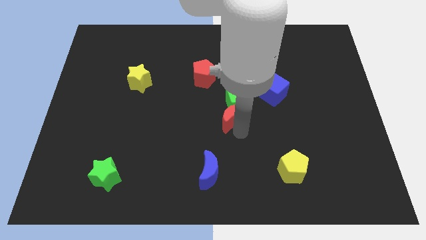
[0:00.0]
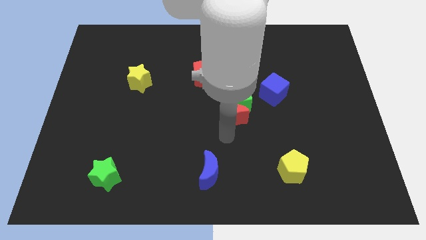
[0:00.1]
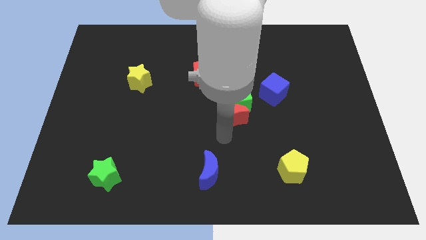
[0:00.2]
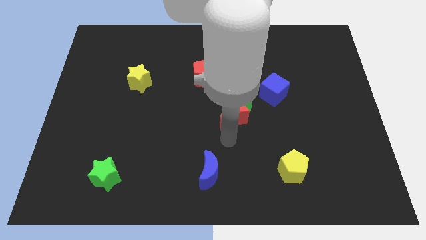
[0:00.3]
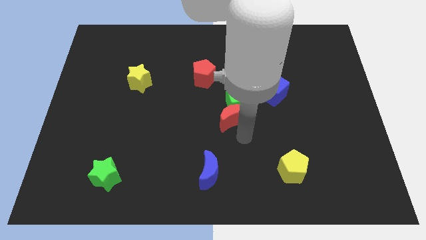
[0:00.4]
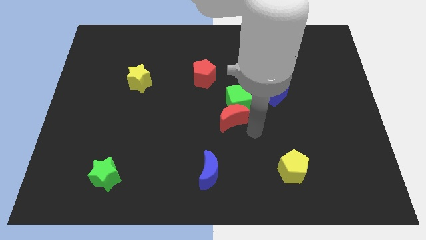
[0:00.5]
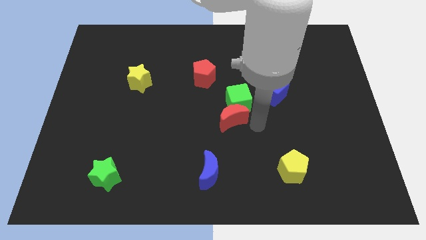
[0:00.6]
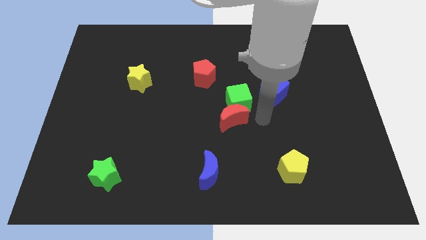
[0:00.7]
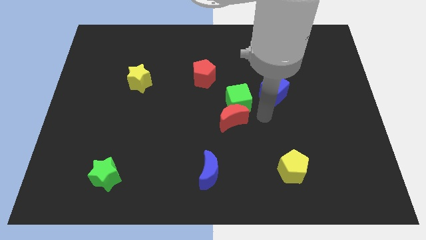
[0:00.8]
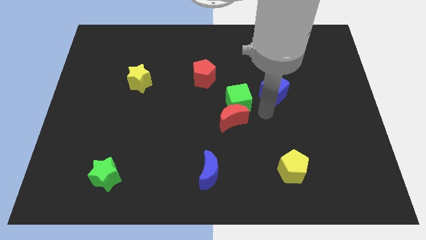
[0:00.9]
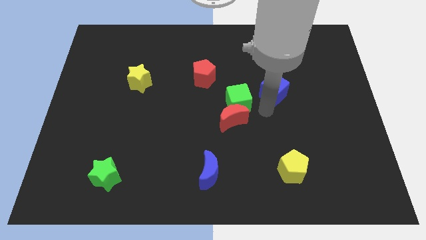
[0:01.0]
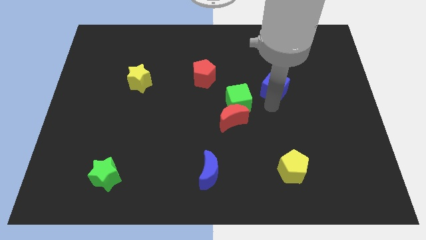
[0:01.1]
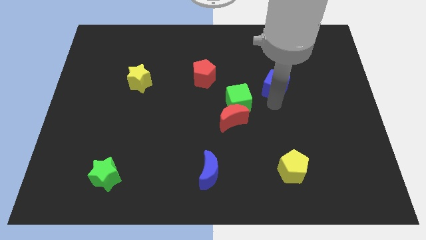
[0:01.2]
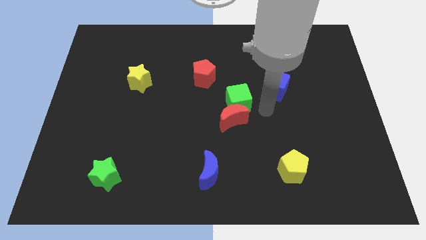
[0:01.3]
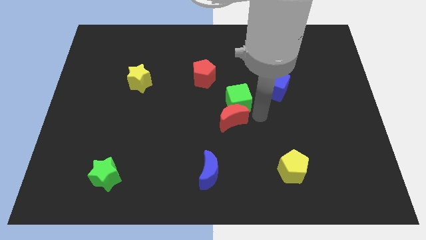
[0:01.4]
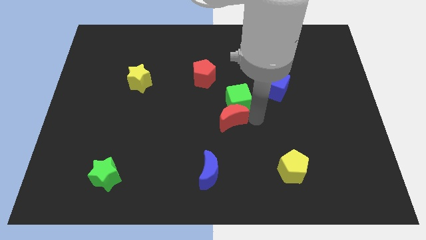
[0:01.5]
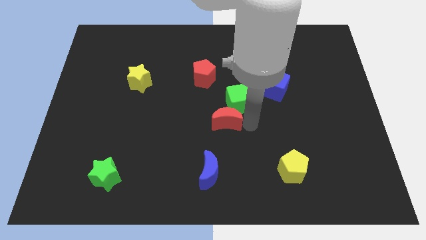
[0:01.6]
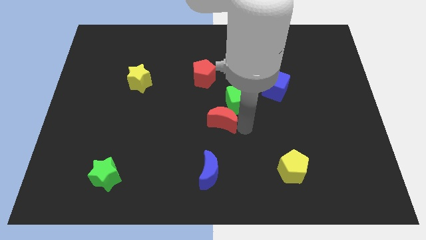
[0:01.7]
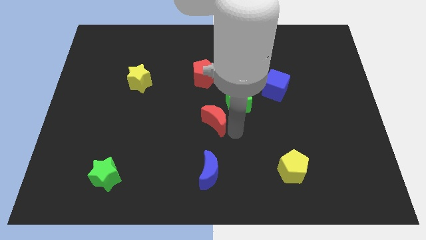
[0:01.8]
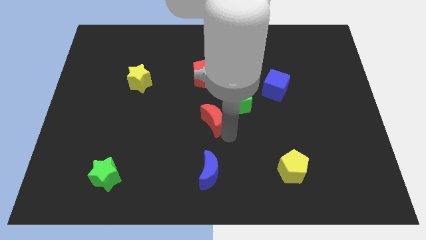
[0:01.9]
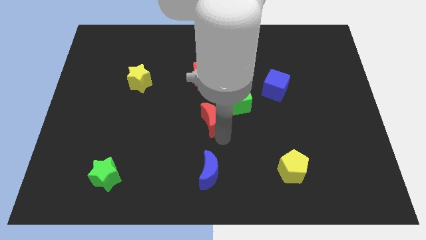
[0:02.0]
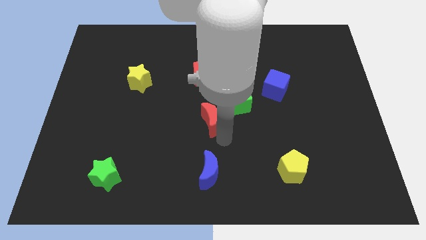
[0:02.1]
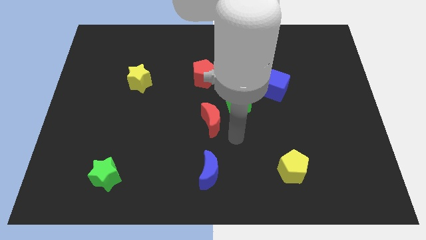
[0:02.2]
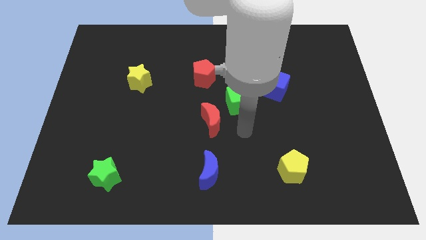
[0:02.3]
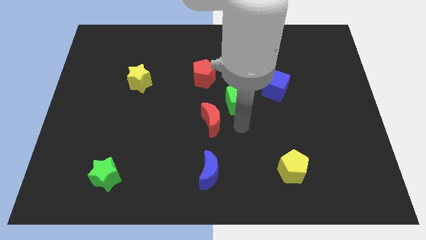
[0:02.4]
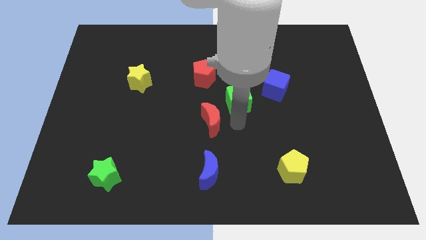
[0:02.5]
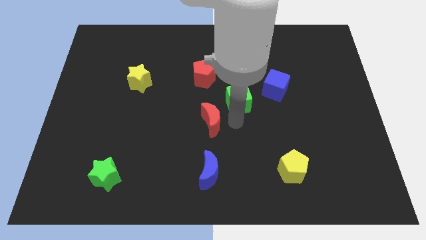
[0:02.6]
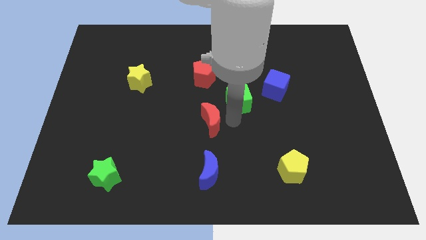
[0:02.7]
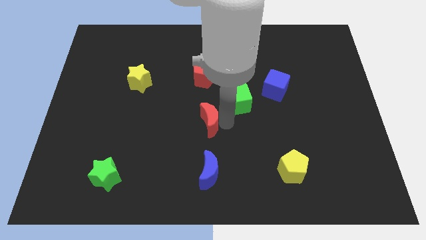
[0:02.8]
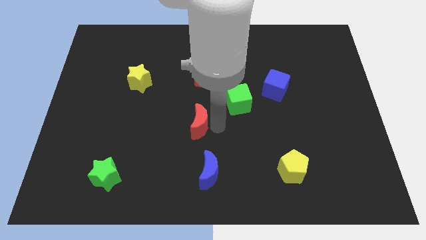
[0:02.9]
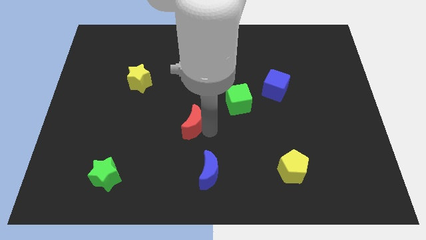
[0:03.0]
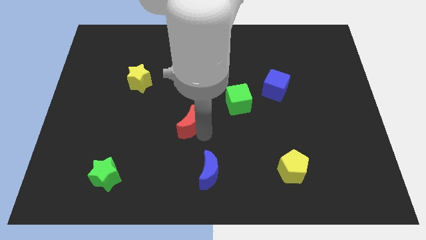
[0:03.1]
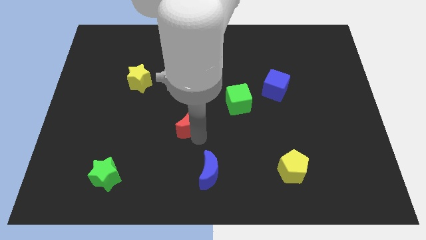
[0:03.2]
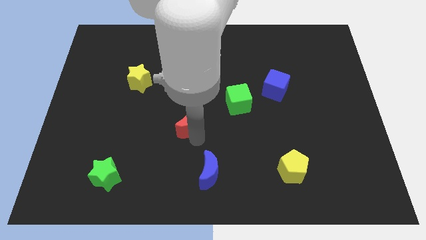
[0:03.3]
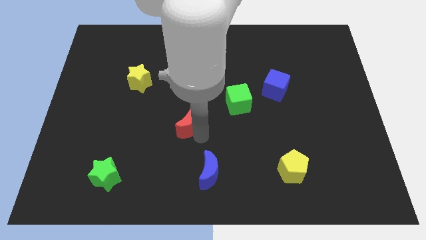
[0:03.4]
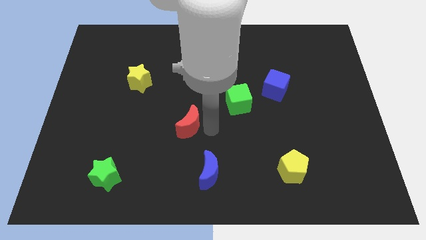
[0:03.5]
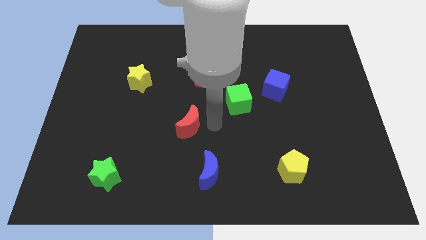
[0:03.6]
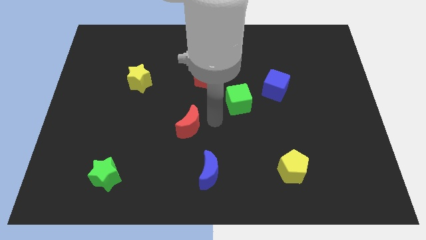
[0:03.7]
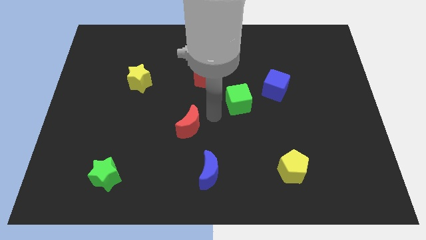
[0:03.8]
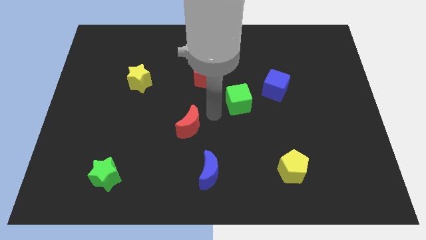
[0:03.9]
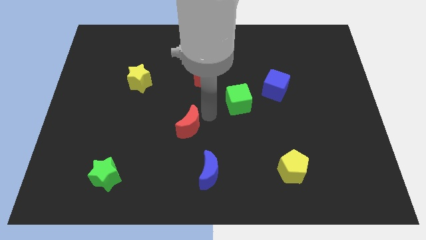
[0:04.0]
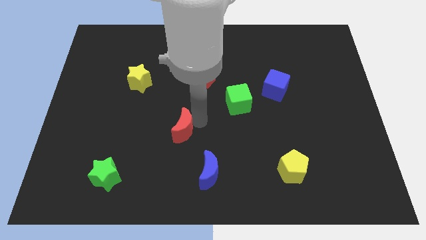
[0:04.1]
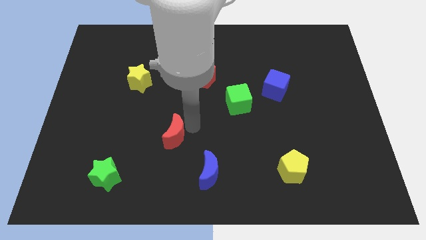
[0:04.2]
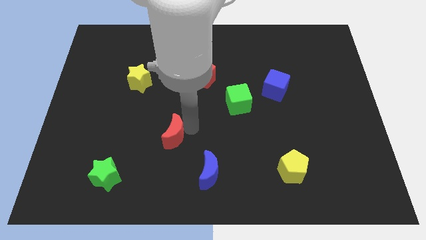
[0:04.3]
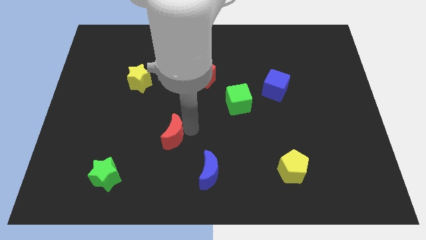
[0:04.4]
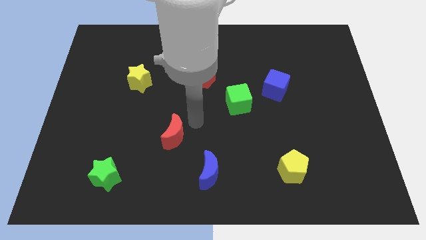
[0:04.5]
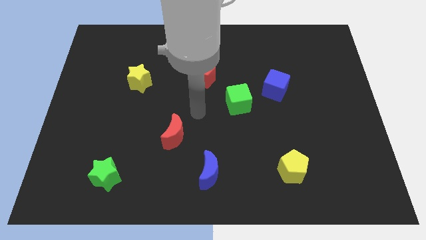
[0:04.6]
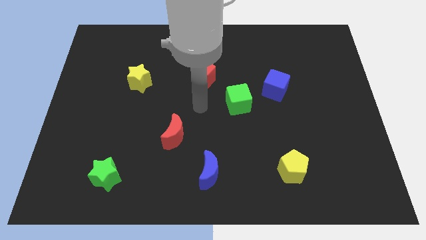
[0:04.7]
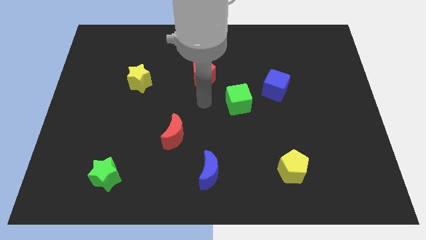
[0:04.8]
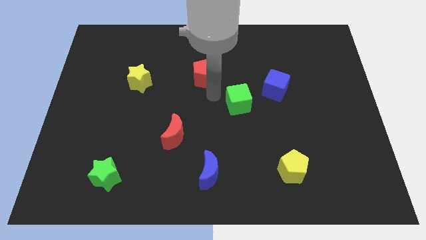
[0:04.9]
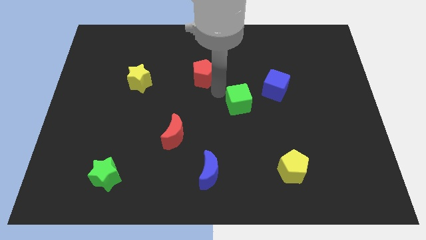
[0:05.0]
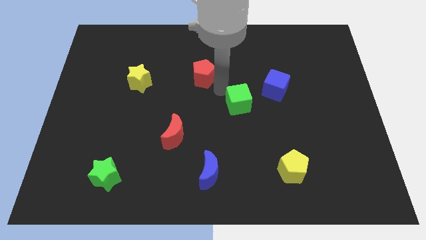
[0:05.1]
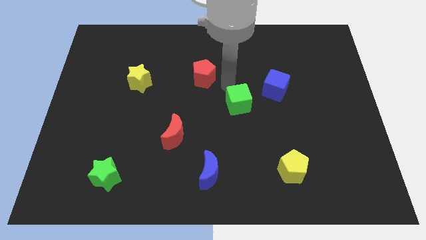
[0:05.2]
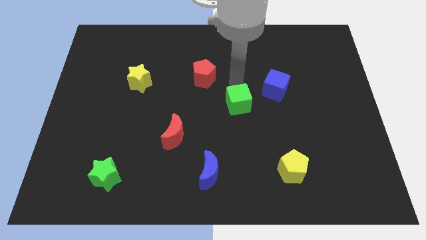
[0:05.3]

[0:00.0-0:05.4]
place the red moon in between the yellow star and blue moon

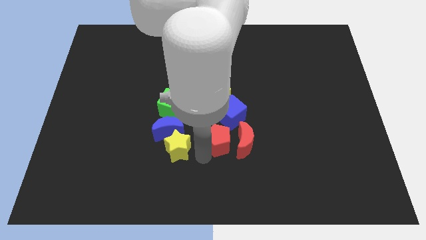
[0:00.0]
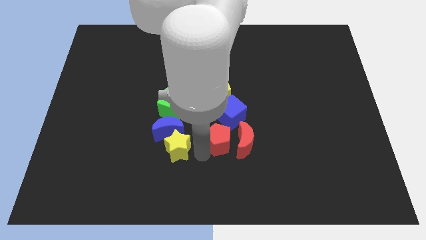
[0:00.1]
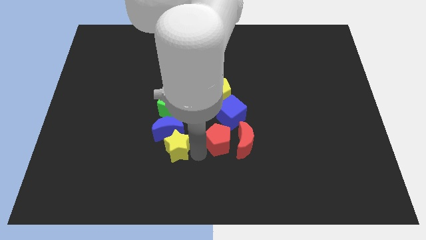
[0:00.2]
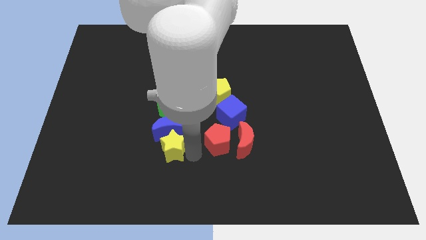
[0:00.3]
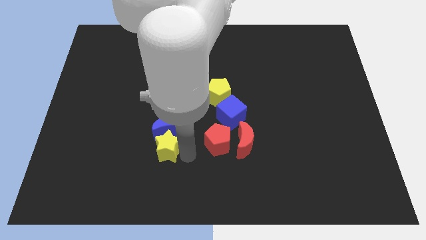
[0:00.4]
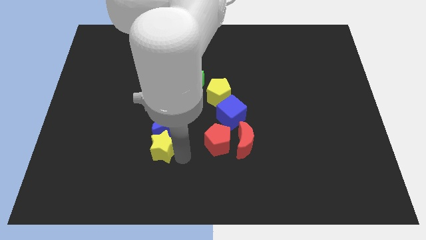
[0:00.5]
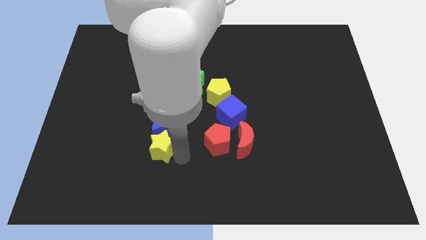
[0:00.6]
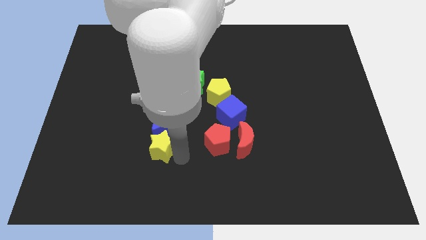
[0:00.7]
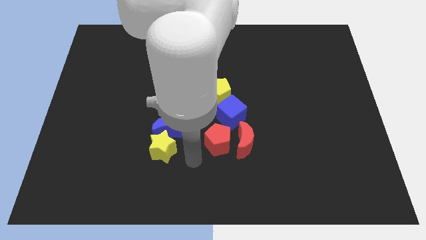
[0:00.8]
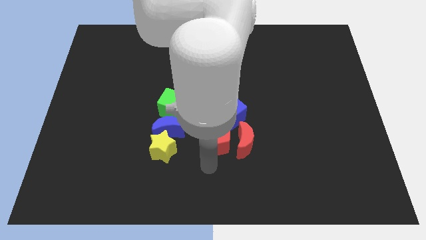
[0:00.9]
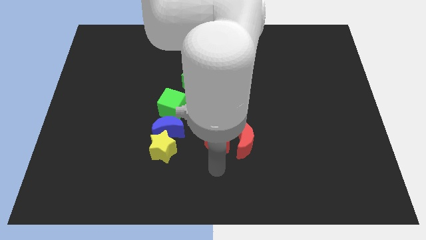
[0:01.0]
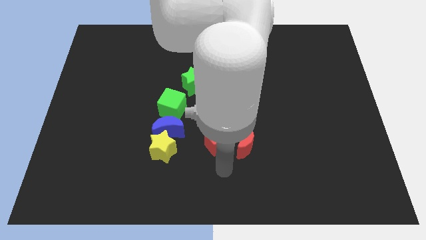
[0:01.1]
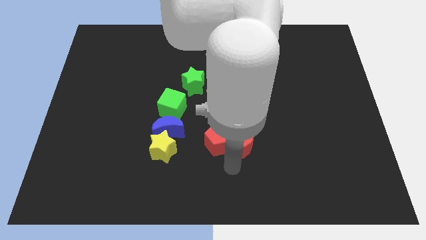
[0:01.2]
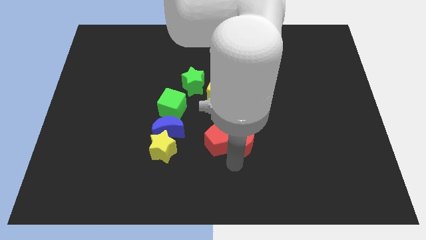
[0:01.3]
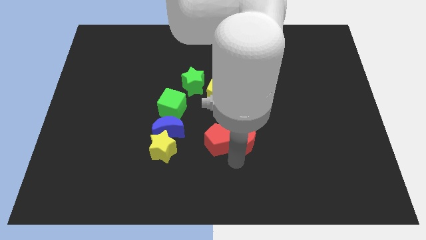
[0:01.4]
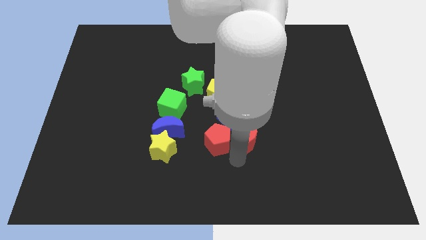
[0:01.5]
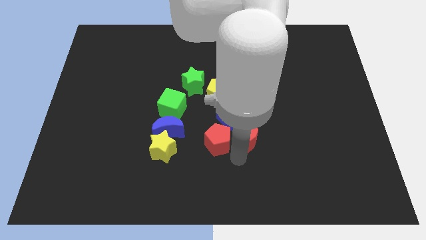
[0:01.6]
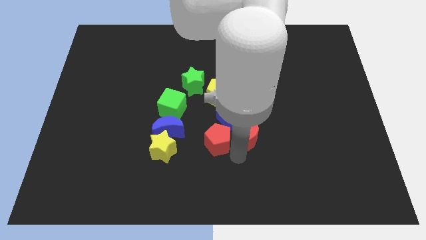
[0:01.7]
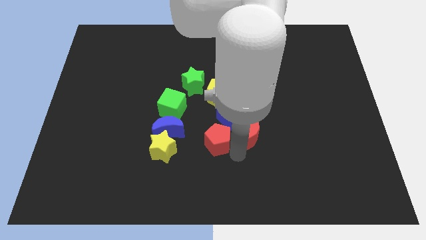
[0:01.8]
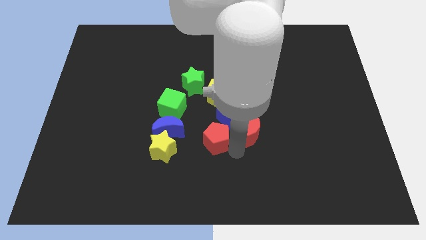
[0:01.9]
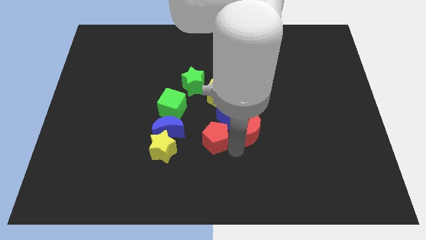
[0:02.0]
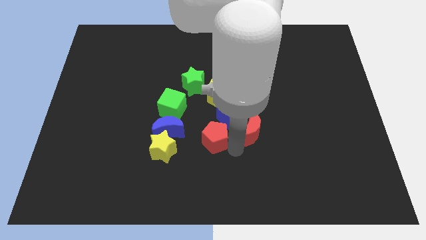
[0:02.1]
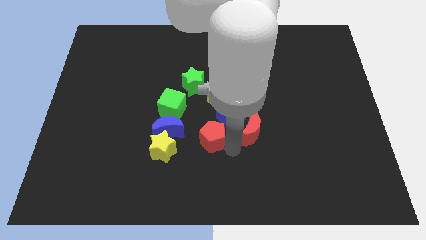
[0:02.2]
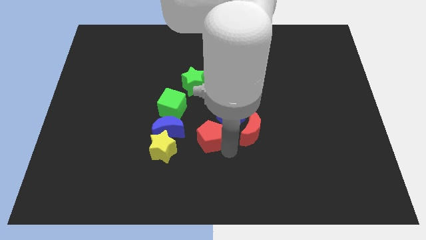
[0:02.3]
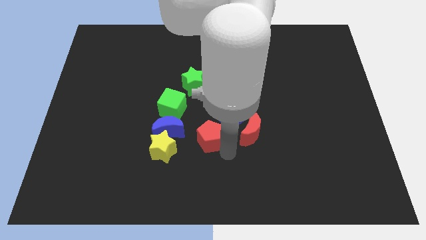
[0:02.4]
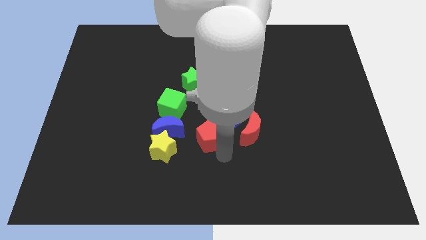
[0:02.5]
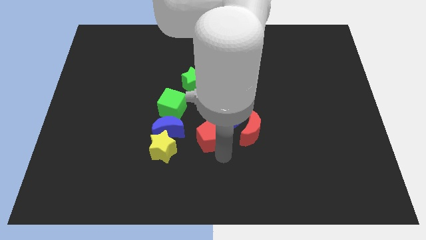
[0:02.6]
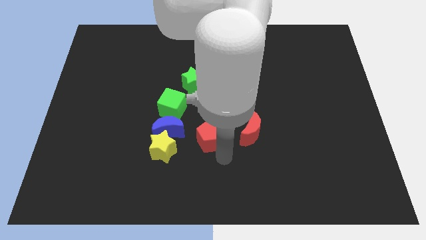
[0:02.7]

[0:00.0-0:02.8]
push the yellow star and the red pentagon slightly to the left

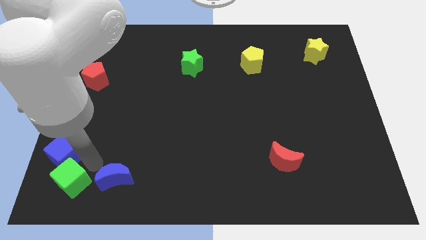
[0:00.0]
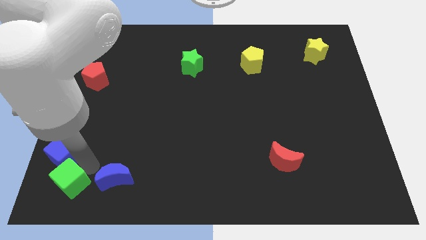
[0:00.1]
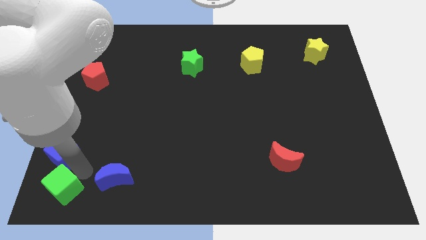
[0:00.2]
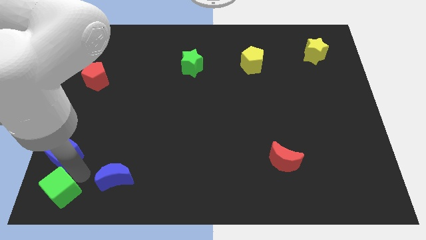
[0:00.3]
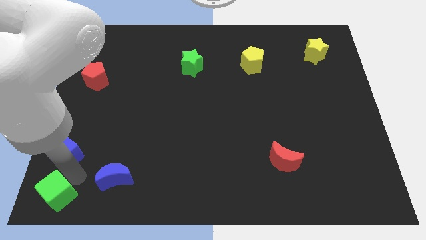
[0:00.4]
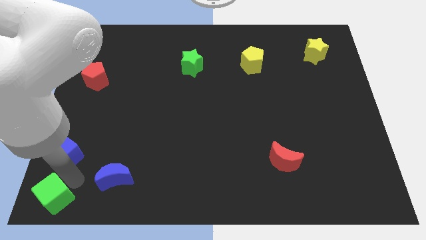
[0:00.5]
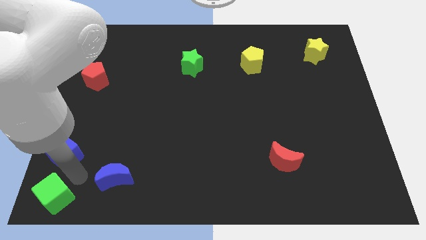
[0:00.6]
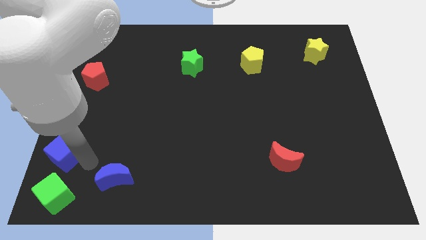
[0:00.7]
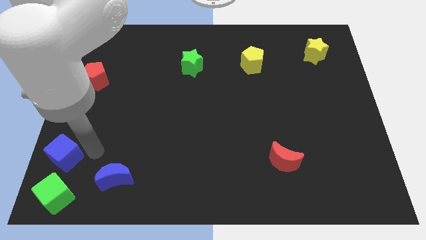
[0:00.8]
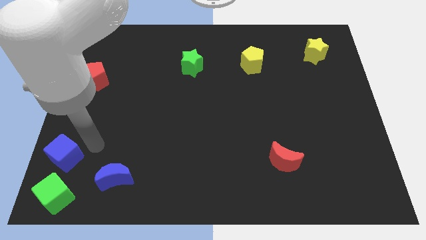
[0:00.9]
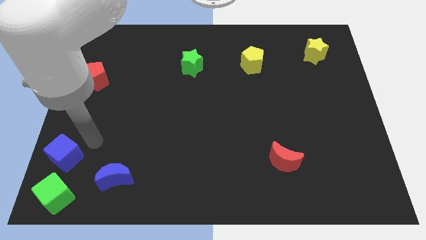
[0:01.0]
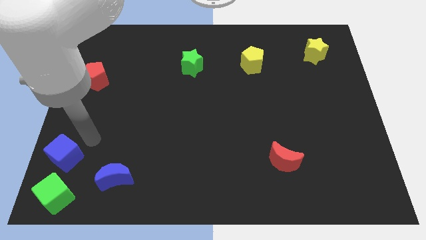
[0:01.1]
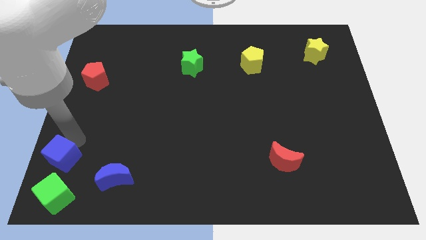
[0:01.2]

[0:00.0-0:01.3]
place the green cube to the bottom left corner of the board
